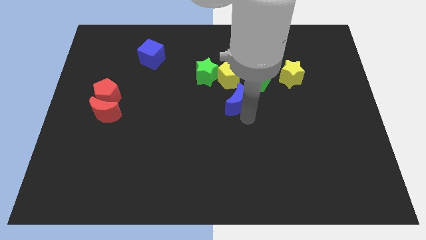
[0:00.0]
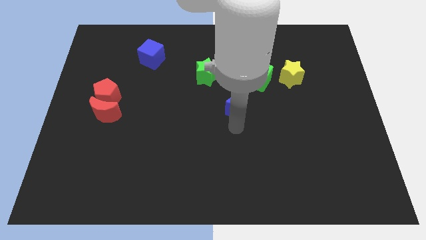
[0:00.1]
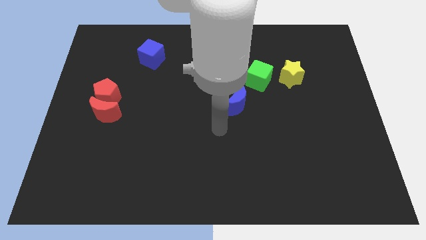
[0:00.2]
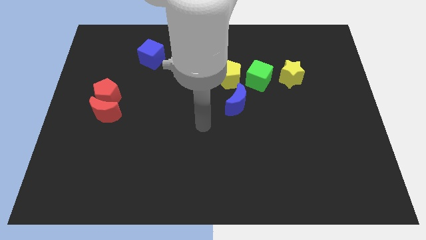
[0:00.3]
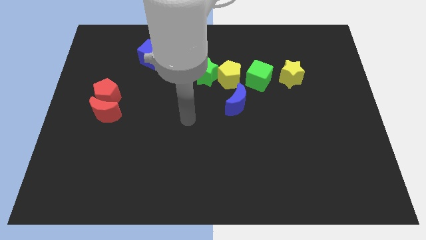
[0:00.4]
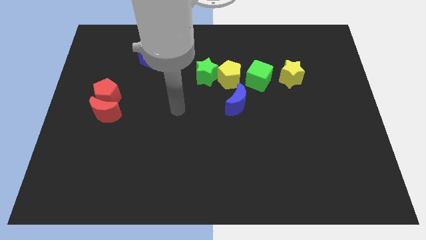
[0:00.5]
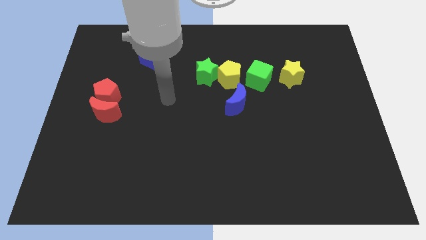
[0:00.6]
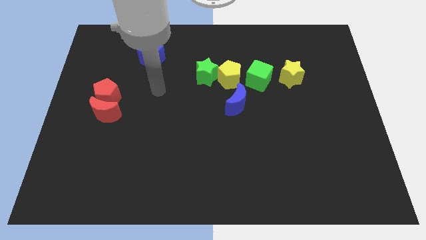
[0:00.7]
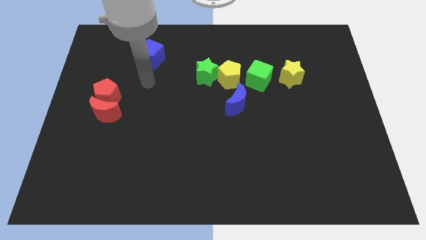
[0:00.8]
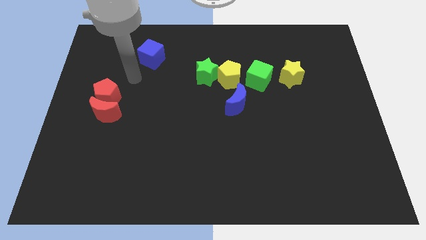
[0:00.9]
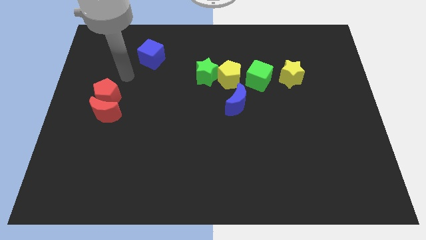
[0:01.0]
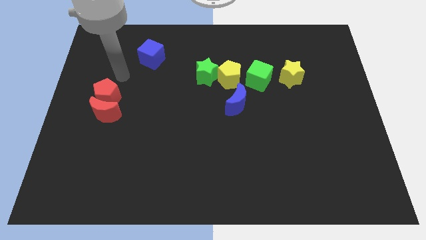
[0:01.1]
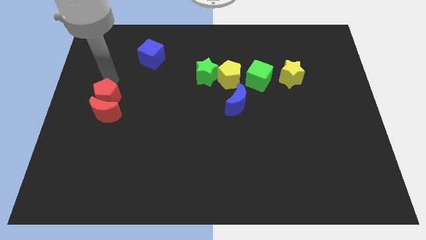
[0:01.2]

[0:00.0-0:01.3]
place your arm towards the top side of the red pentagon

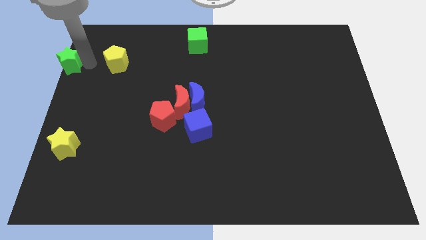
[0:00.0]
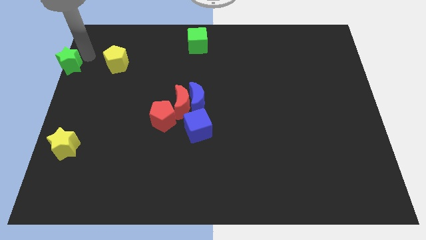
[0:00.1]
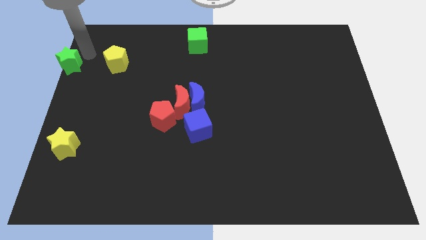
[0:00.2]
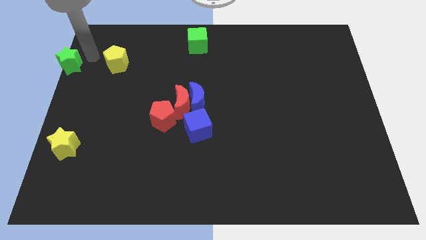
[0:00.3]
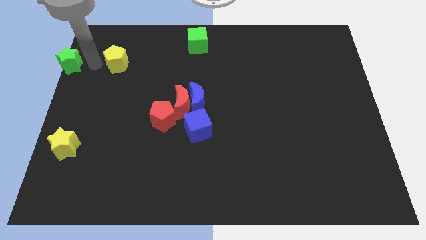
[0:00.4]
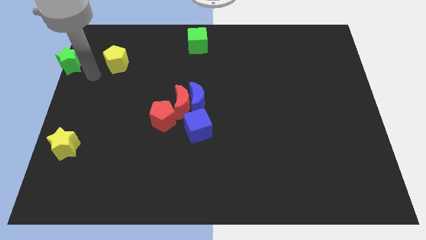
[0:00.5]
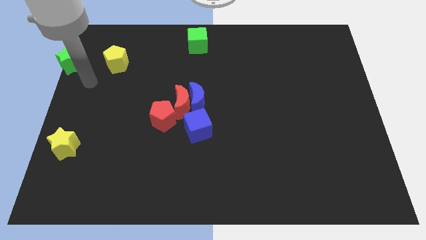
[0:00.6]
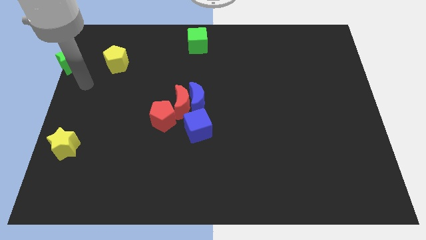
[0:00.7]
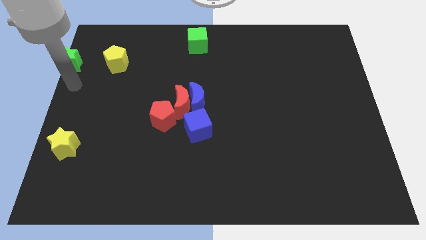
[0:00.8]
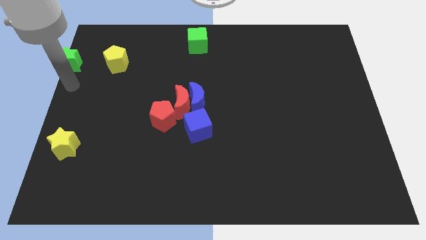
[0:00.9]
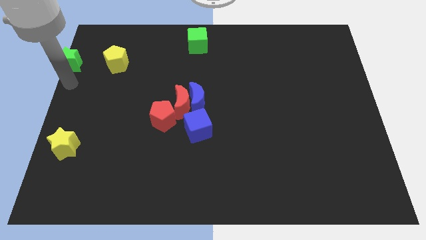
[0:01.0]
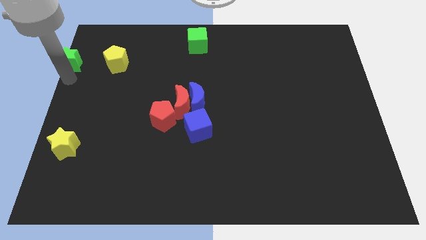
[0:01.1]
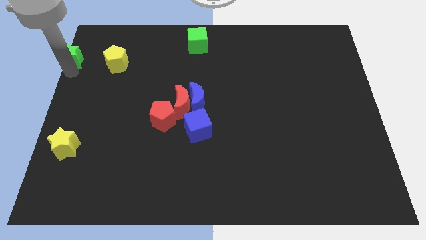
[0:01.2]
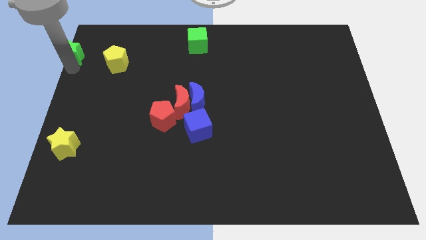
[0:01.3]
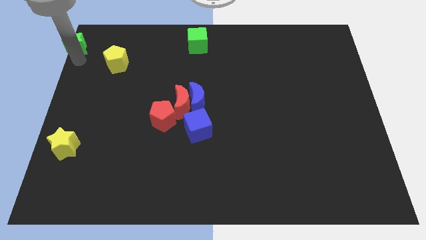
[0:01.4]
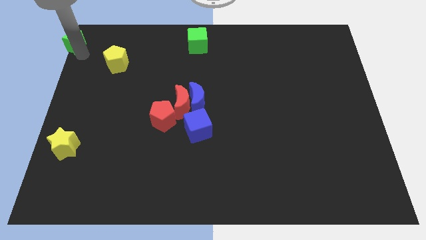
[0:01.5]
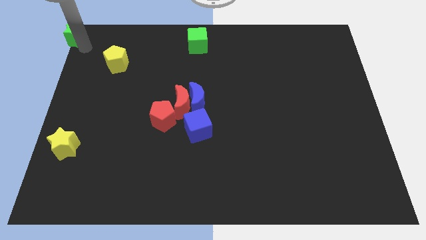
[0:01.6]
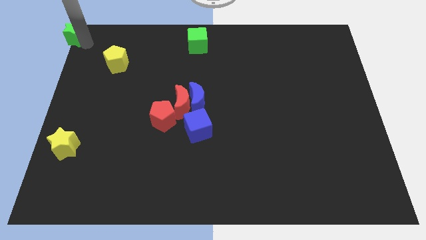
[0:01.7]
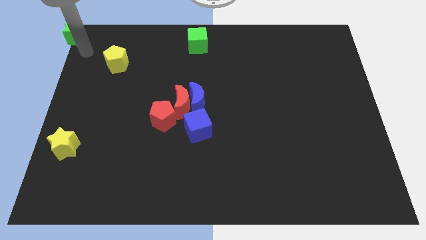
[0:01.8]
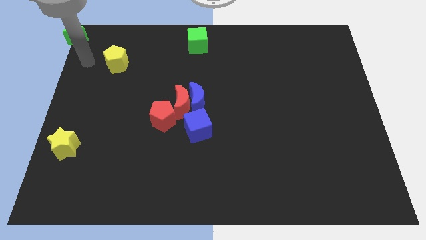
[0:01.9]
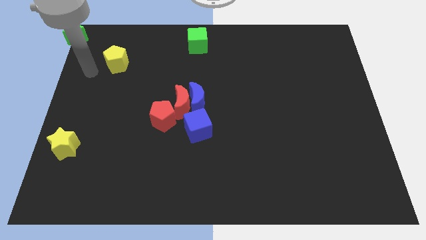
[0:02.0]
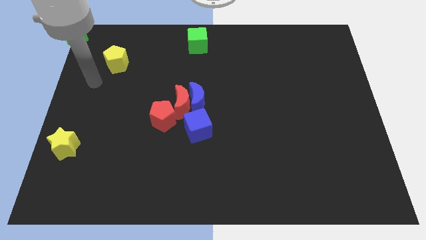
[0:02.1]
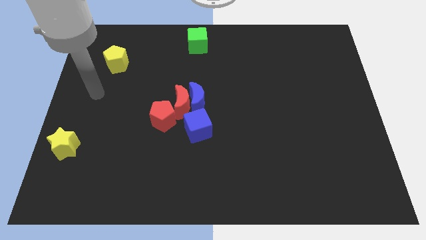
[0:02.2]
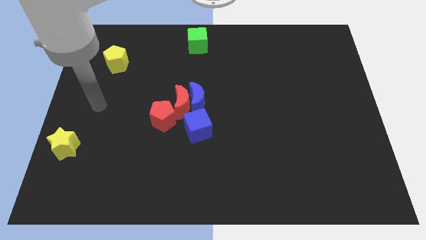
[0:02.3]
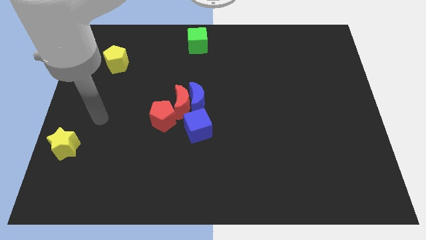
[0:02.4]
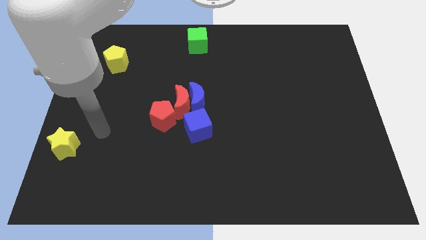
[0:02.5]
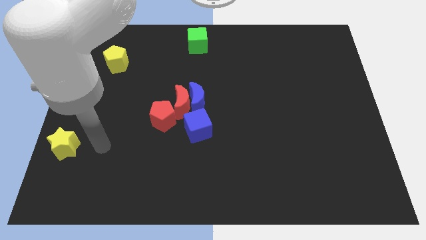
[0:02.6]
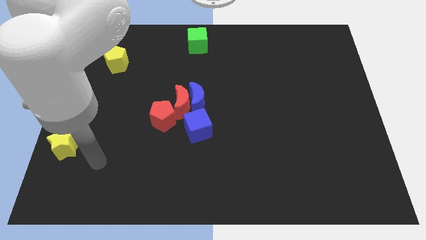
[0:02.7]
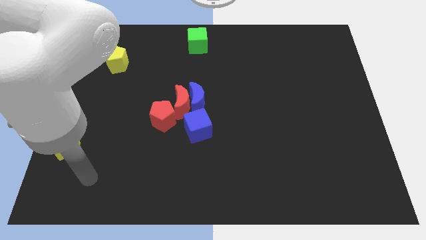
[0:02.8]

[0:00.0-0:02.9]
push the green star to the top left corner of the board

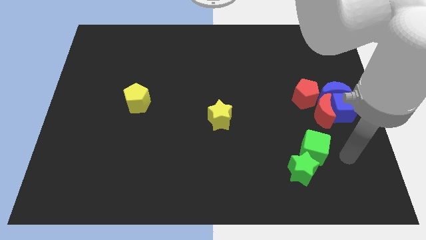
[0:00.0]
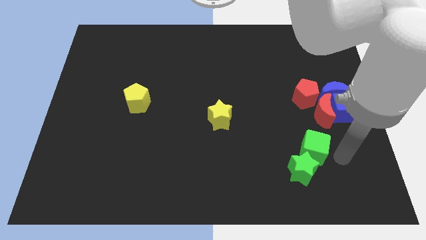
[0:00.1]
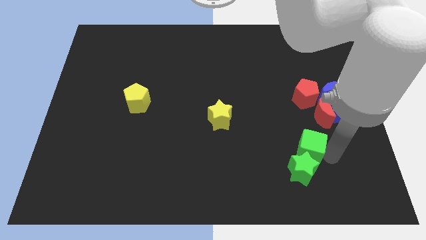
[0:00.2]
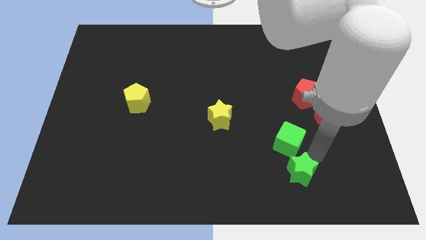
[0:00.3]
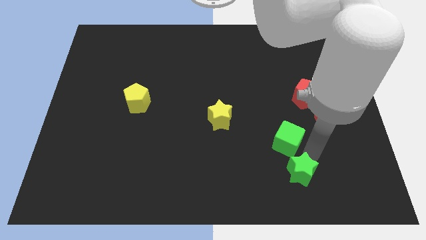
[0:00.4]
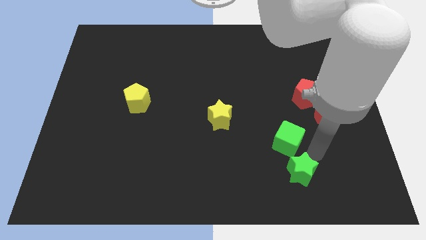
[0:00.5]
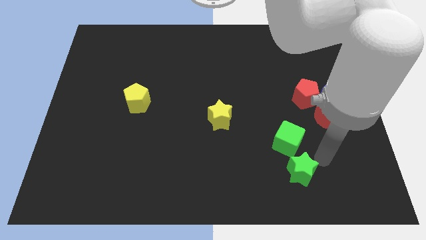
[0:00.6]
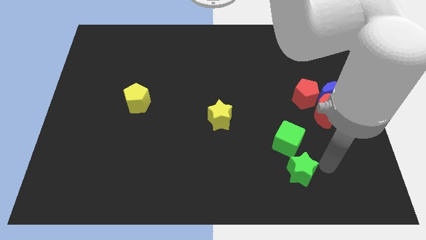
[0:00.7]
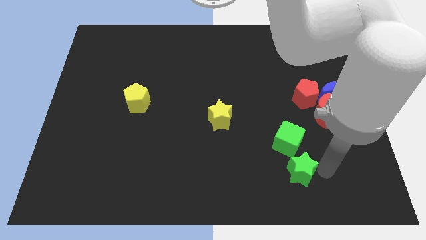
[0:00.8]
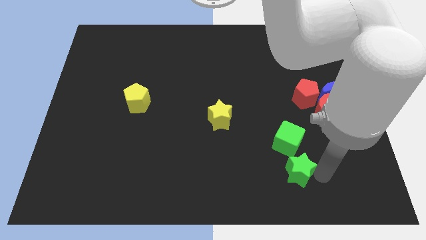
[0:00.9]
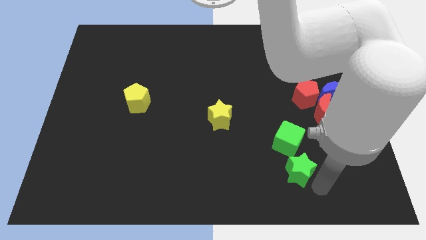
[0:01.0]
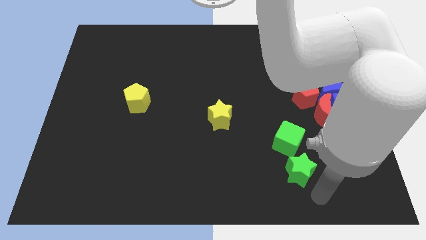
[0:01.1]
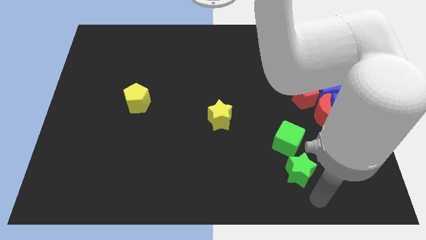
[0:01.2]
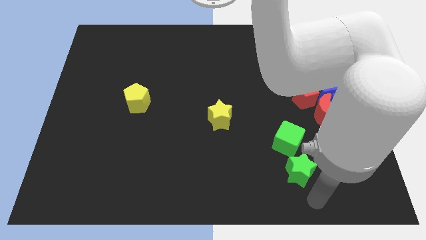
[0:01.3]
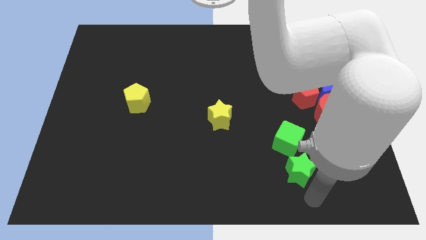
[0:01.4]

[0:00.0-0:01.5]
slightly move the green cube towards the left side of the board

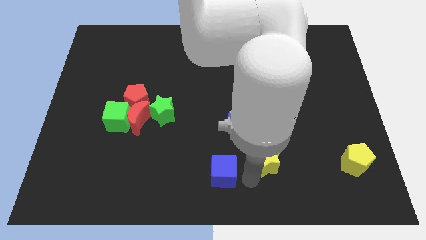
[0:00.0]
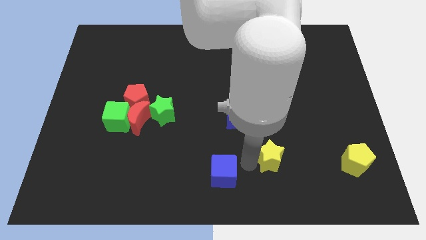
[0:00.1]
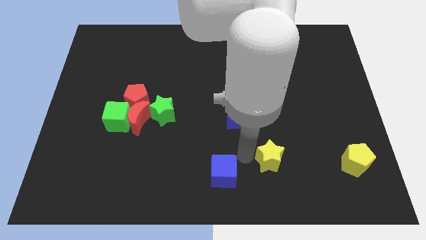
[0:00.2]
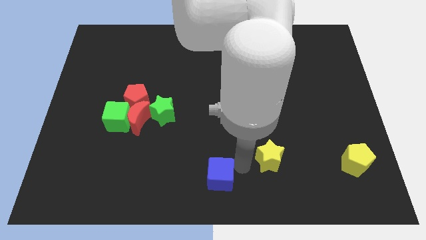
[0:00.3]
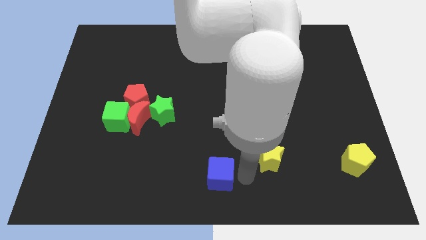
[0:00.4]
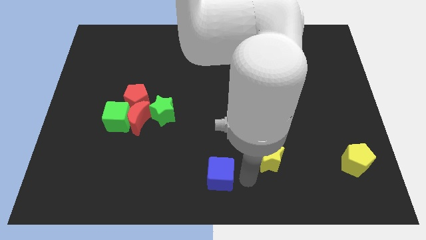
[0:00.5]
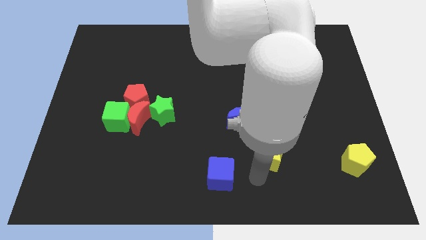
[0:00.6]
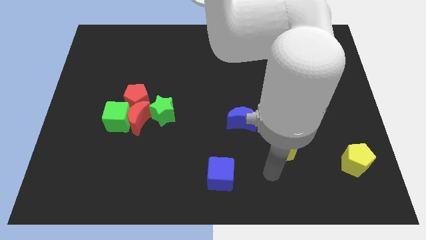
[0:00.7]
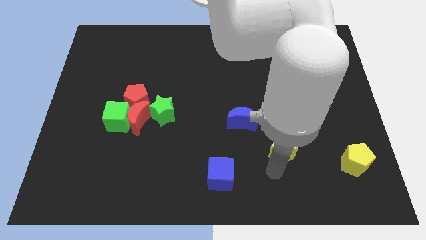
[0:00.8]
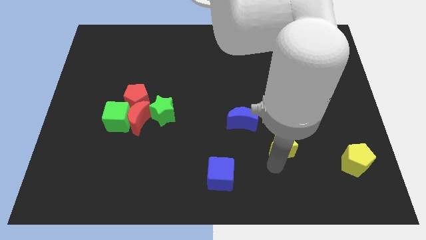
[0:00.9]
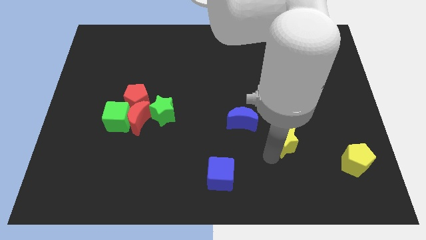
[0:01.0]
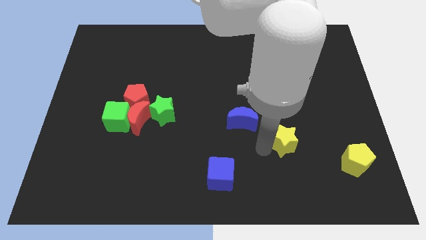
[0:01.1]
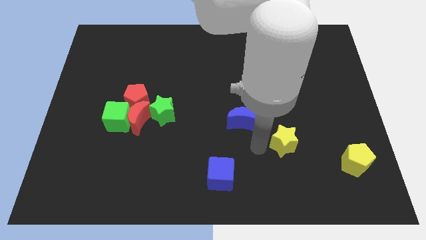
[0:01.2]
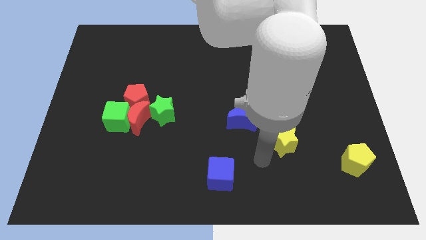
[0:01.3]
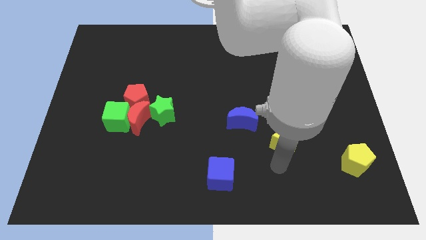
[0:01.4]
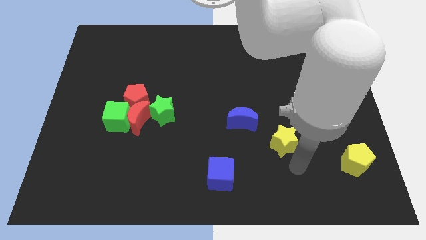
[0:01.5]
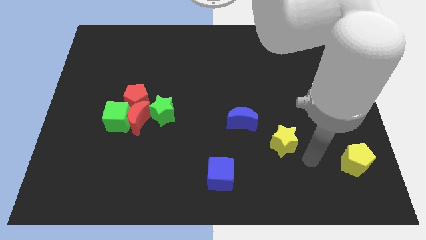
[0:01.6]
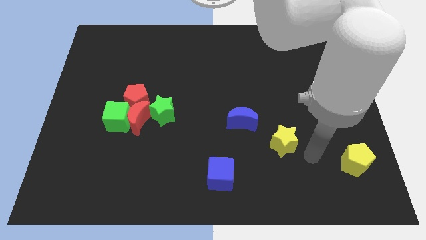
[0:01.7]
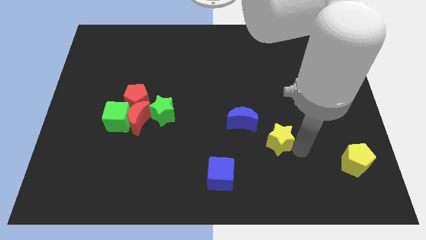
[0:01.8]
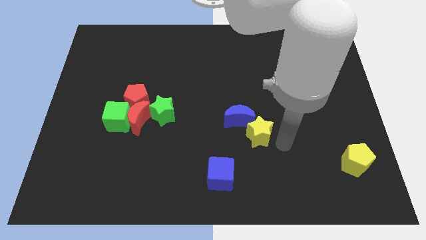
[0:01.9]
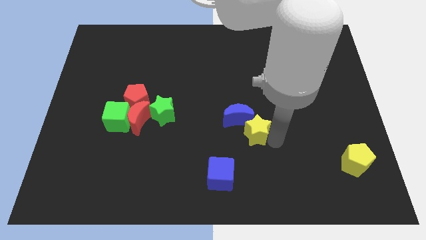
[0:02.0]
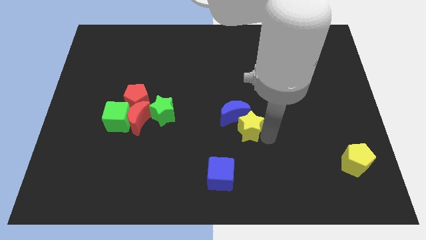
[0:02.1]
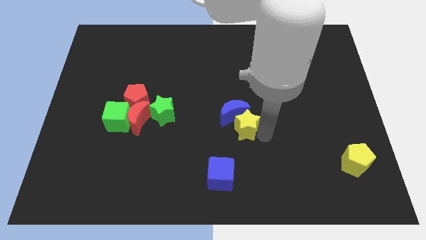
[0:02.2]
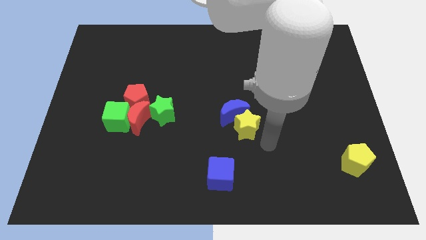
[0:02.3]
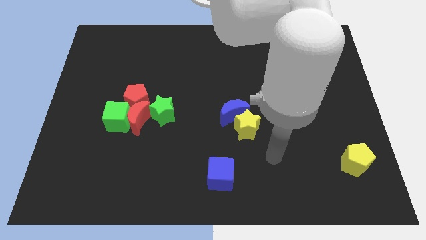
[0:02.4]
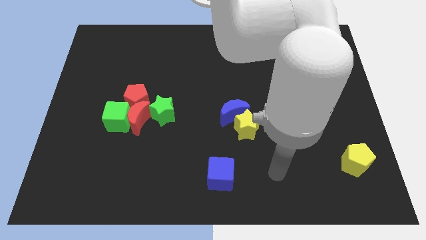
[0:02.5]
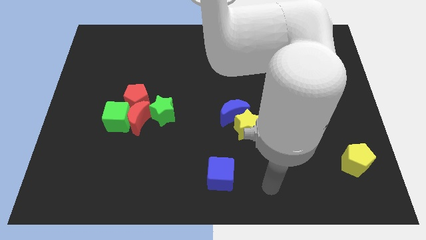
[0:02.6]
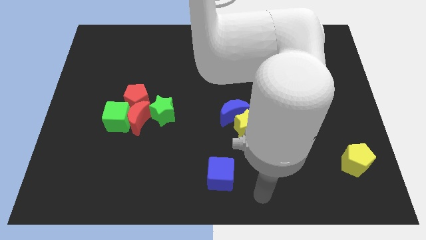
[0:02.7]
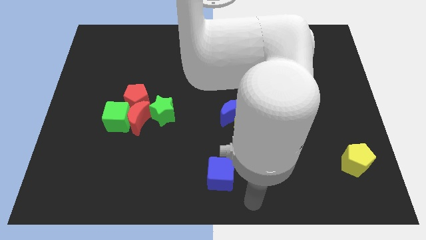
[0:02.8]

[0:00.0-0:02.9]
push the yellow star into the blue crescent

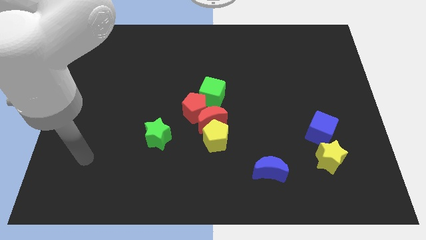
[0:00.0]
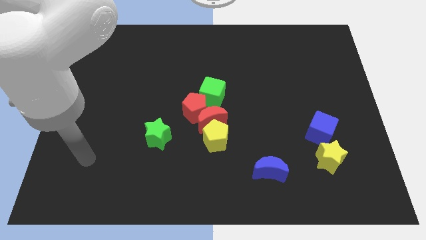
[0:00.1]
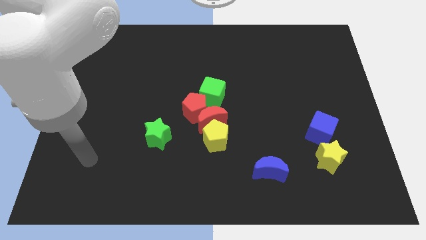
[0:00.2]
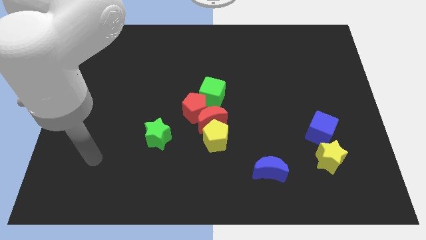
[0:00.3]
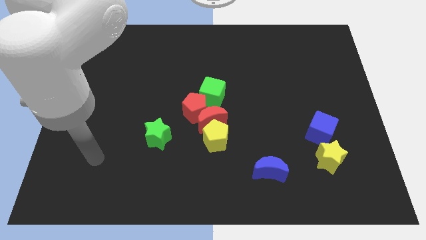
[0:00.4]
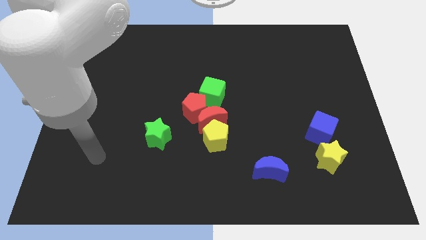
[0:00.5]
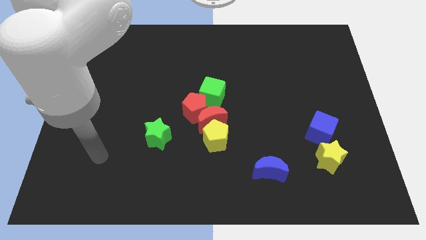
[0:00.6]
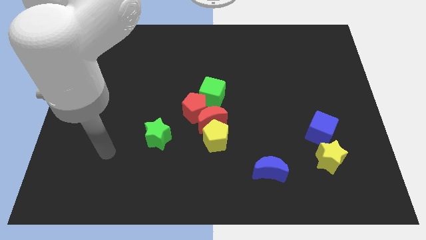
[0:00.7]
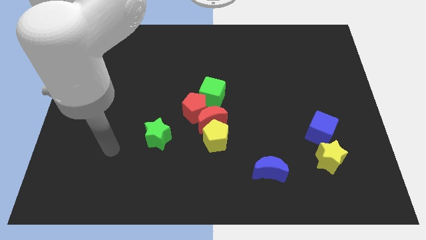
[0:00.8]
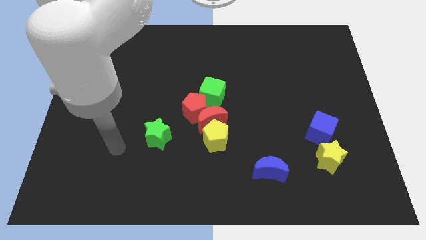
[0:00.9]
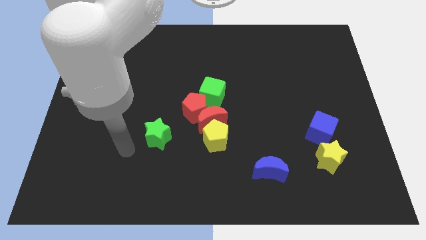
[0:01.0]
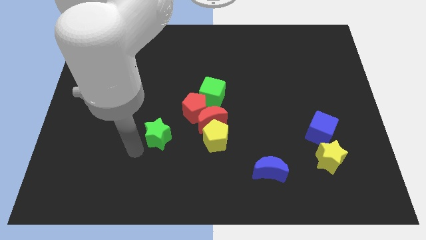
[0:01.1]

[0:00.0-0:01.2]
point the arm to the bottom left of the green star
